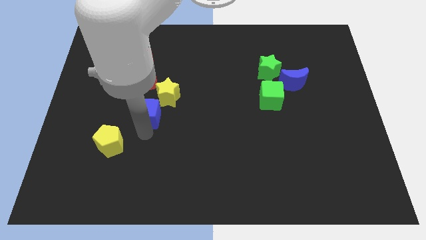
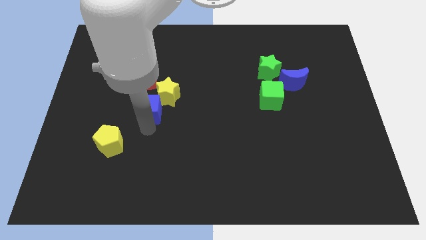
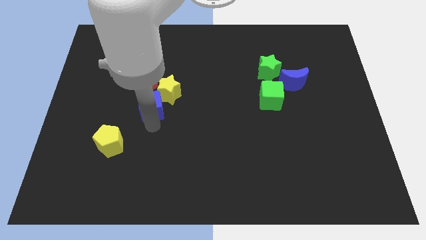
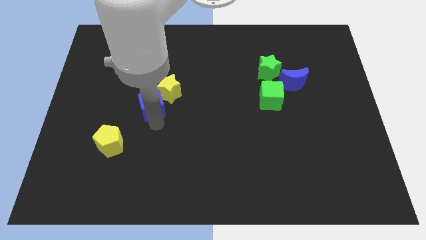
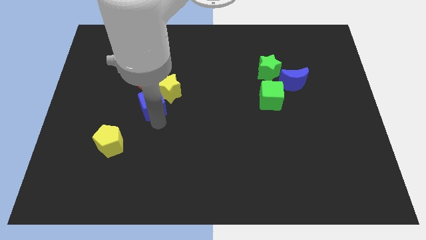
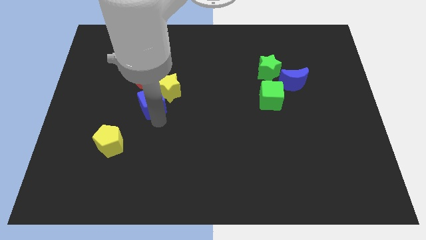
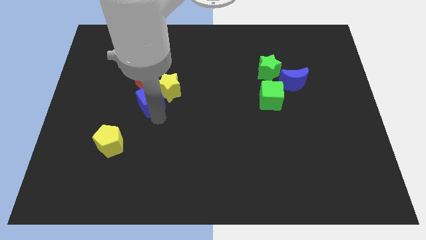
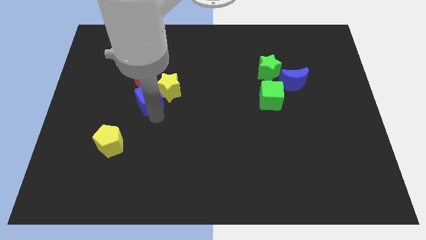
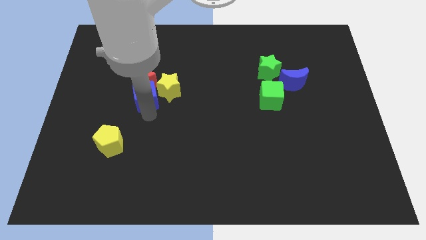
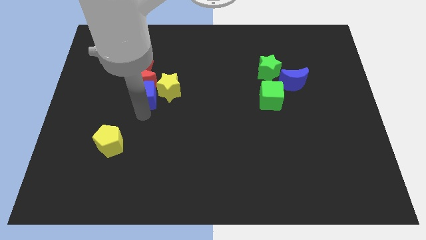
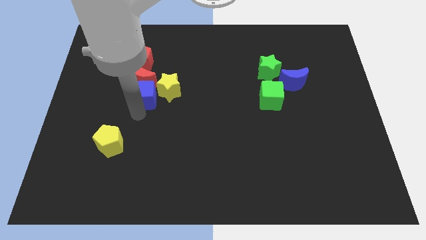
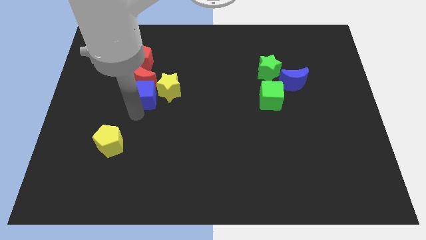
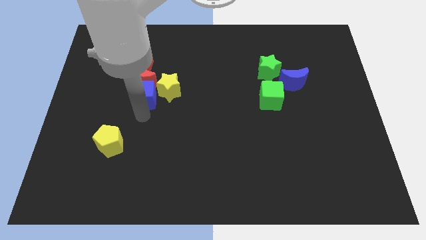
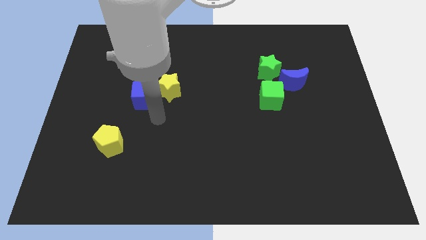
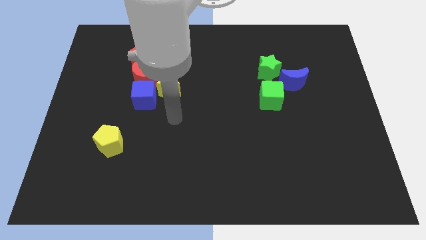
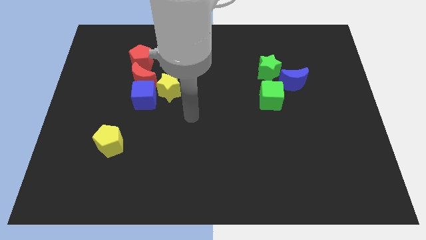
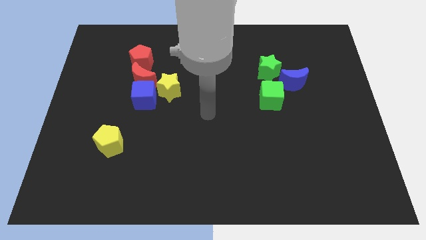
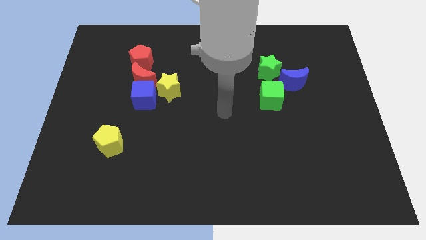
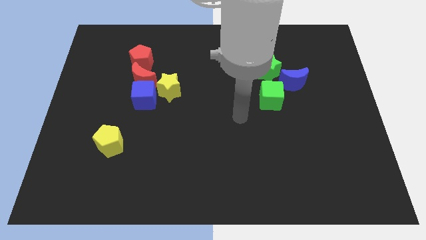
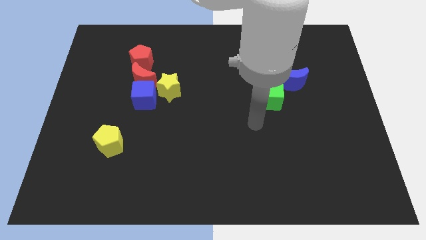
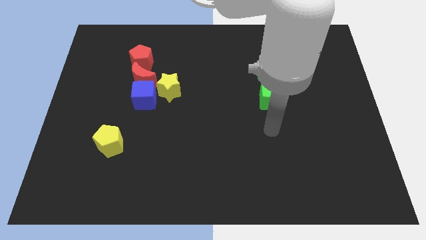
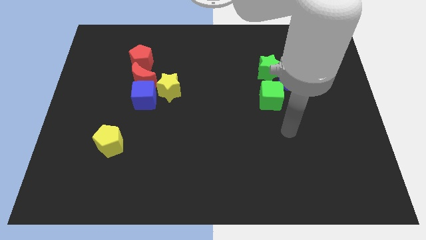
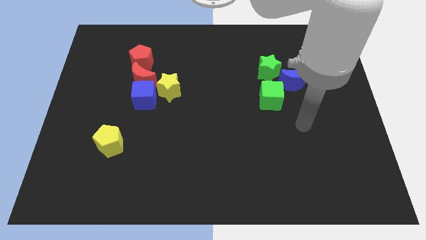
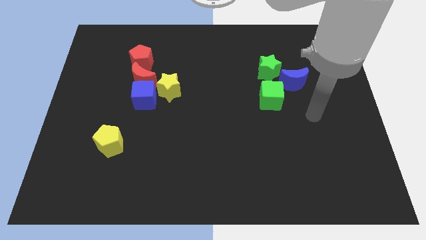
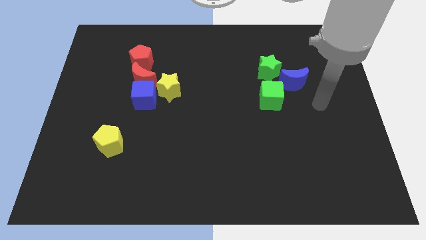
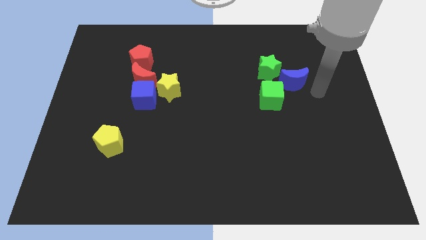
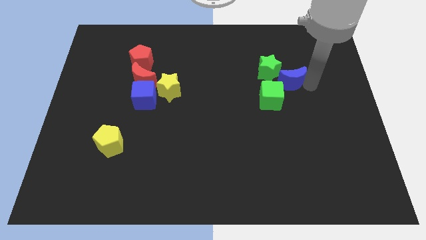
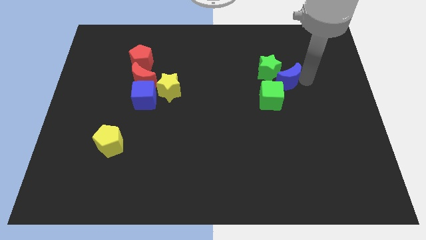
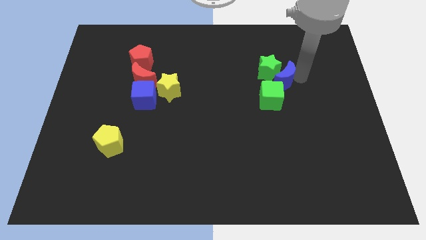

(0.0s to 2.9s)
place the arm right to the blue moon

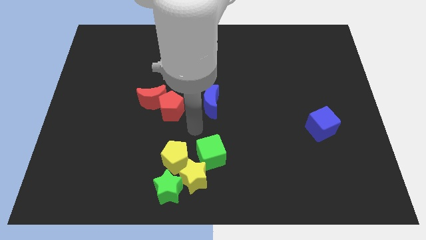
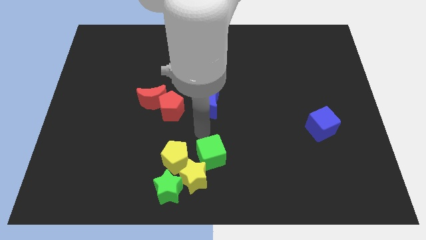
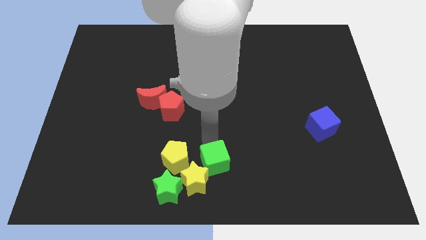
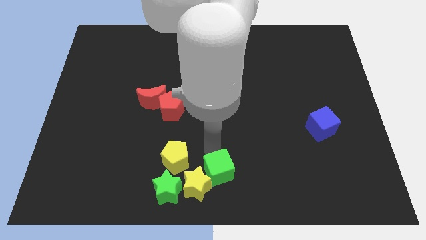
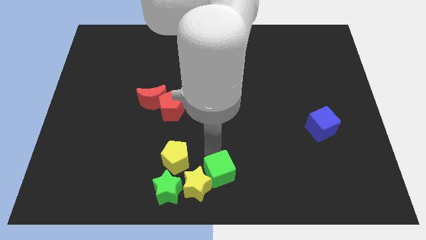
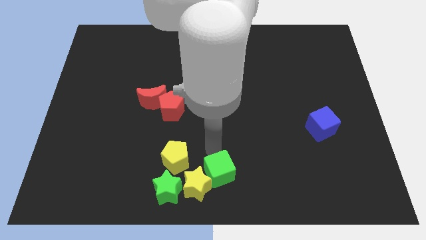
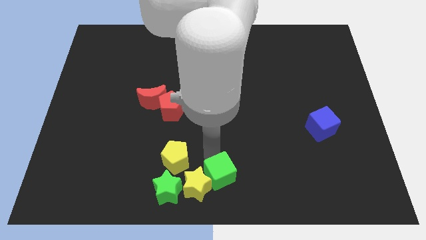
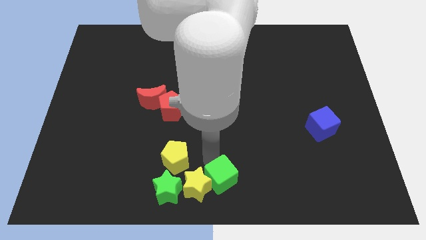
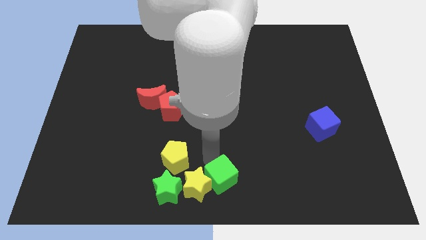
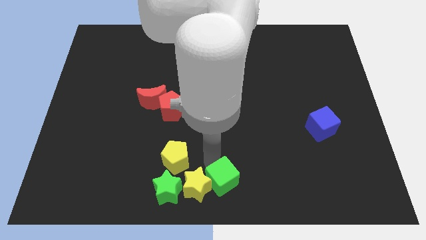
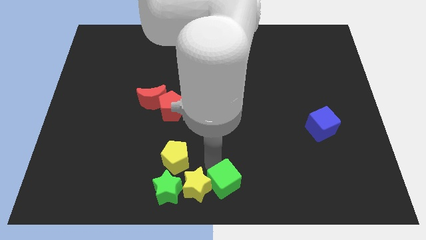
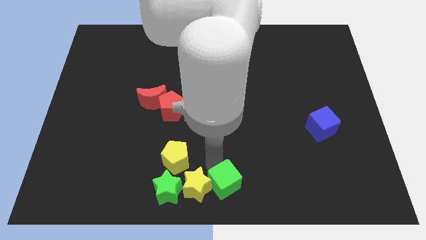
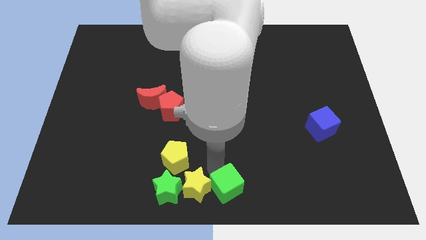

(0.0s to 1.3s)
drag green cube to the right side of the yellow star

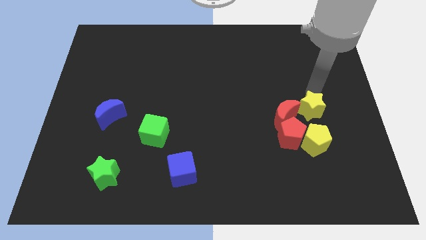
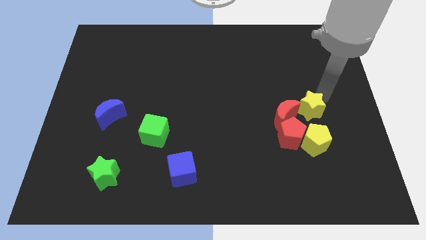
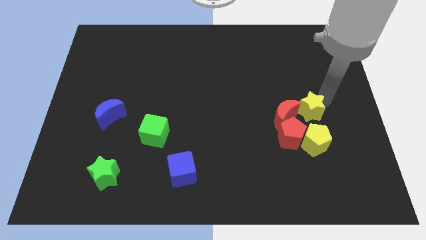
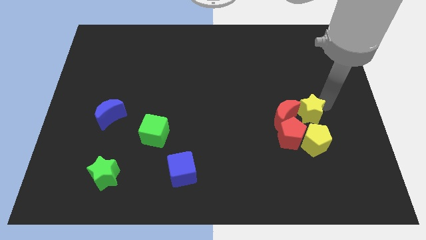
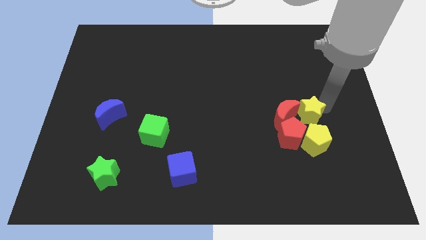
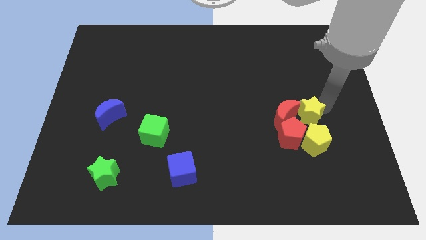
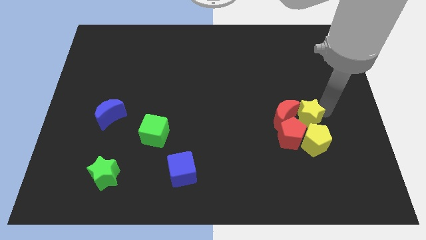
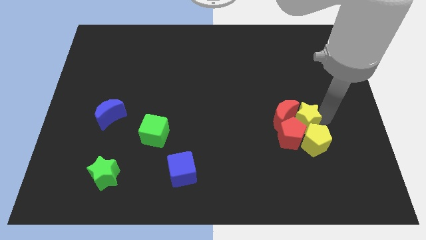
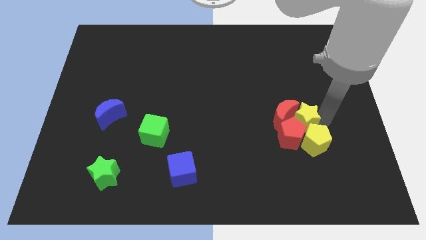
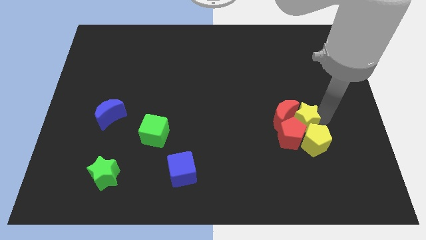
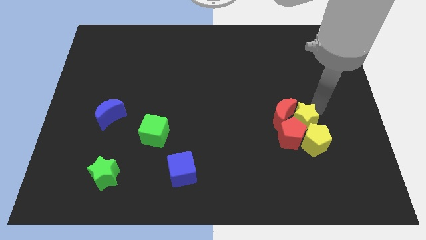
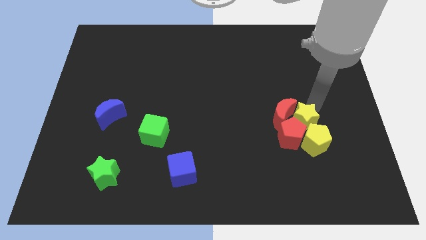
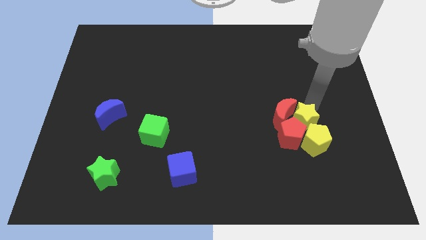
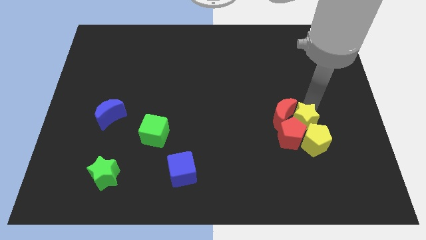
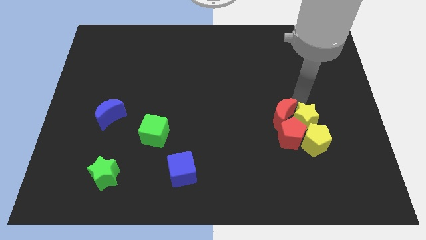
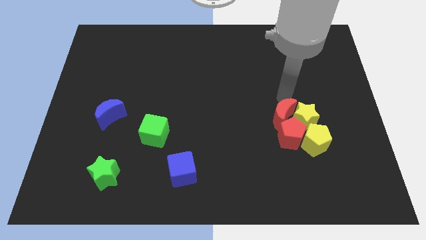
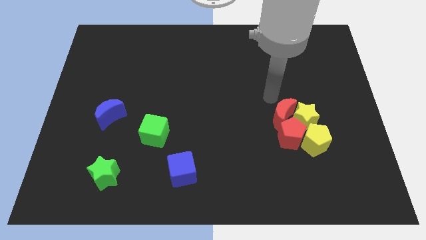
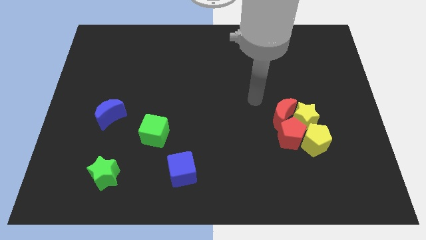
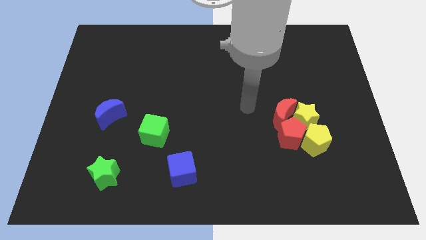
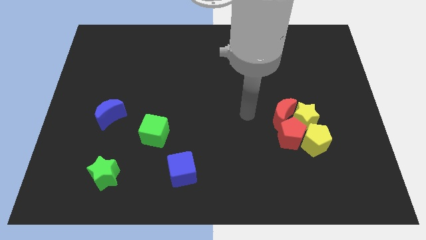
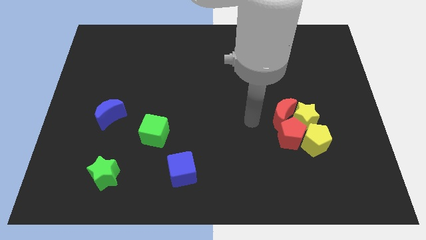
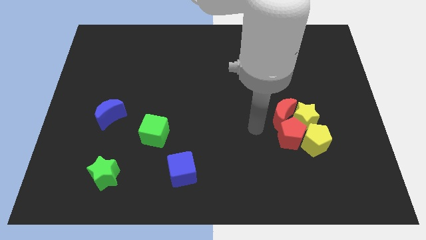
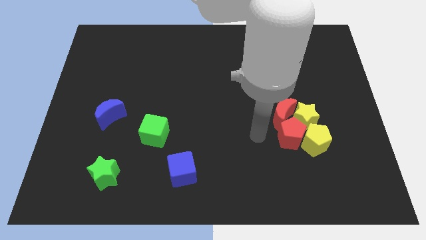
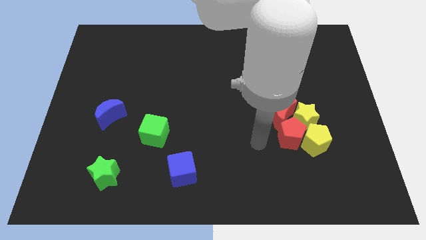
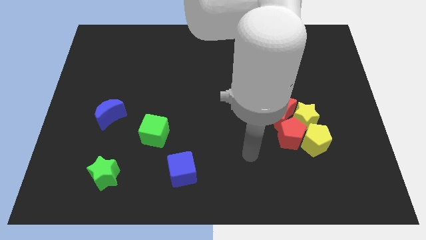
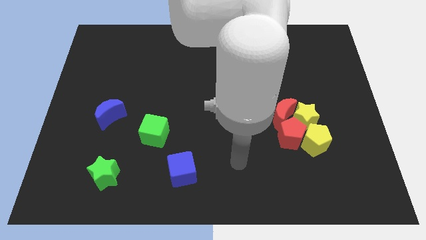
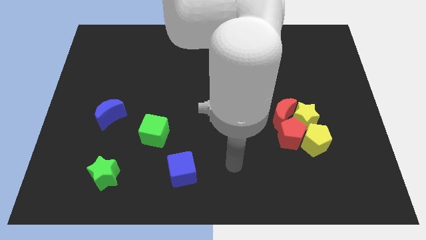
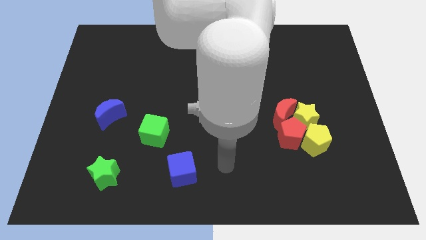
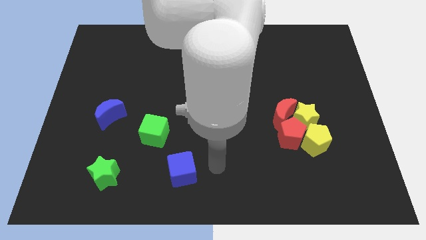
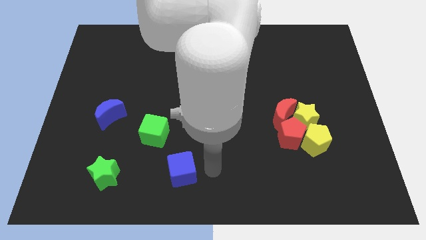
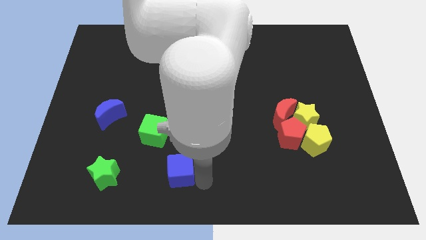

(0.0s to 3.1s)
place the arm to the right of the blue cube

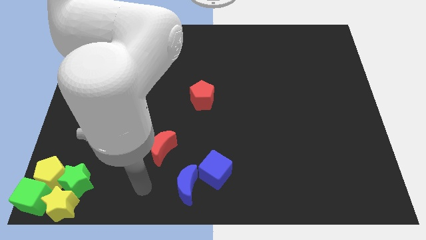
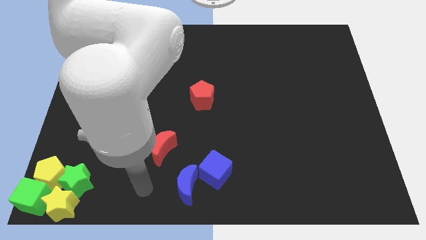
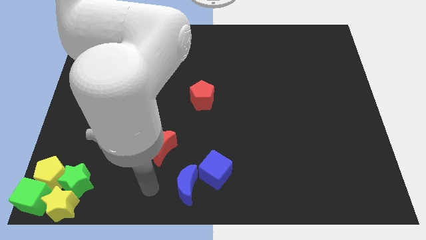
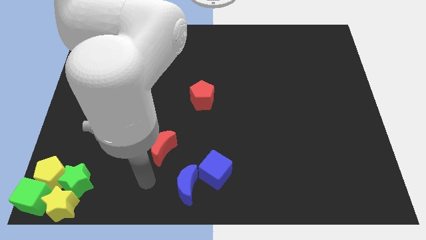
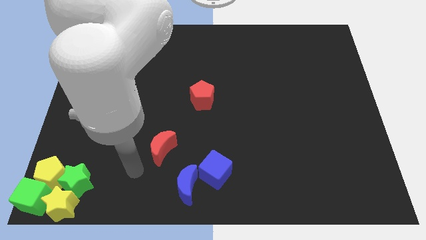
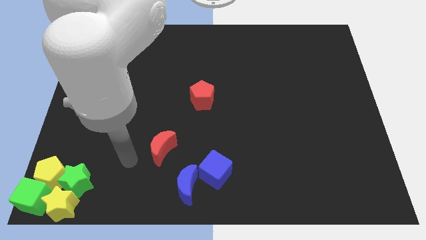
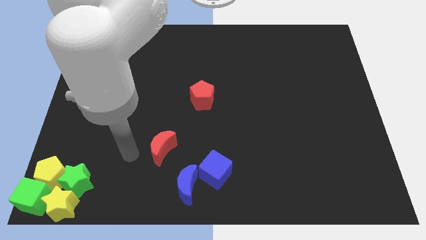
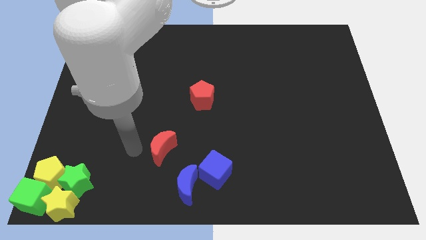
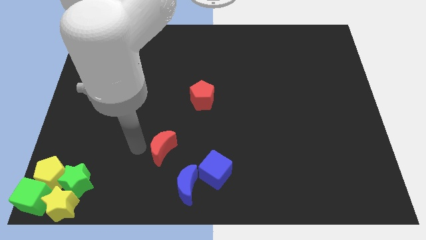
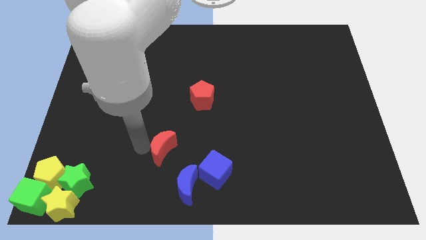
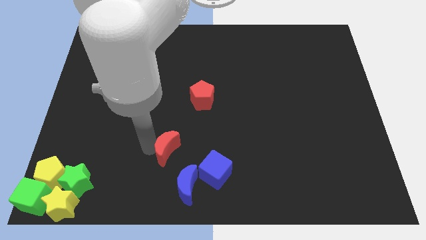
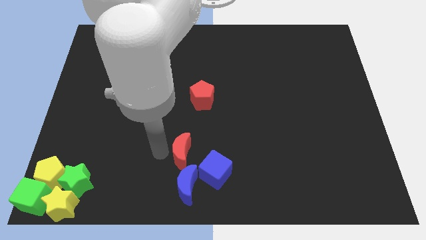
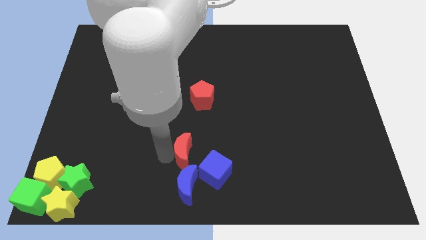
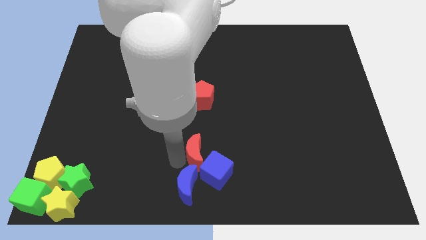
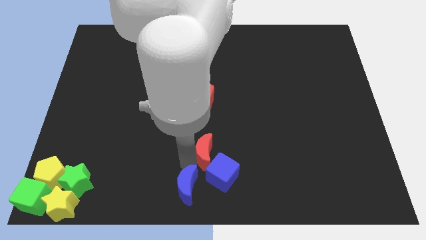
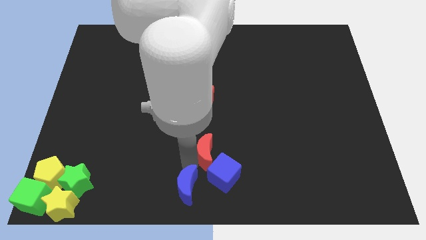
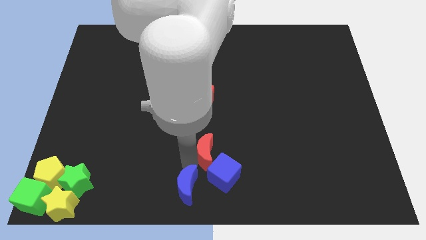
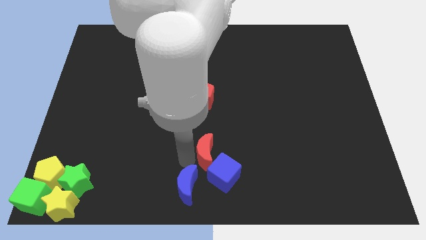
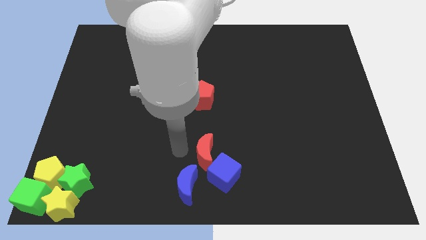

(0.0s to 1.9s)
push the red moon into the top left side of the blue cube
